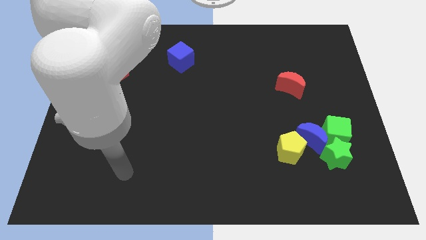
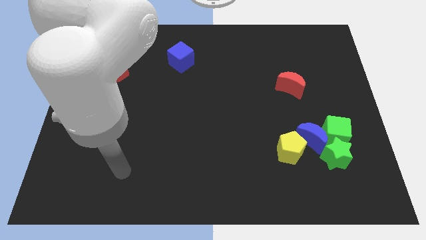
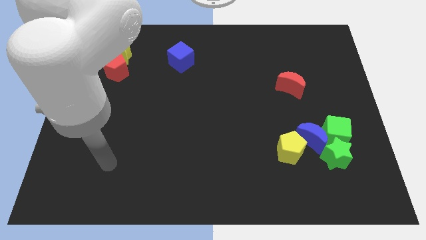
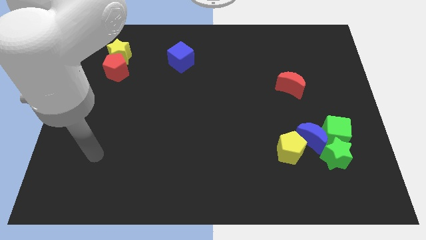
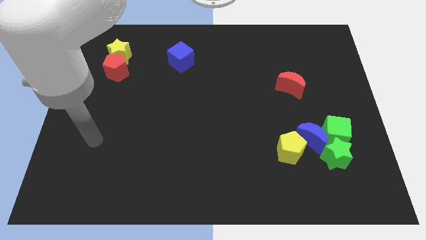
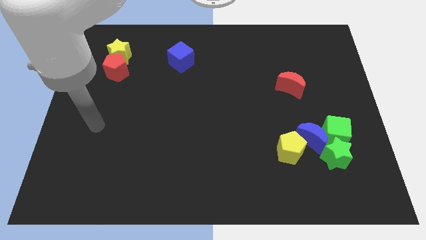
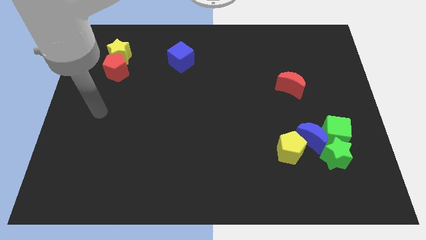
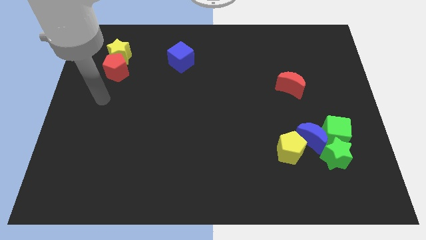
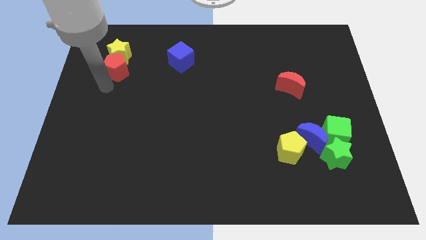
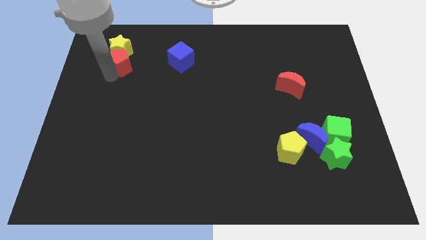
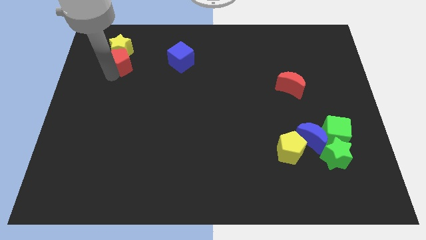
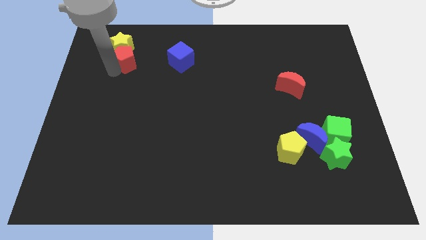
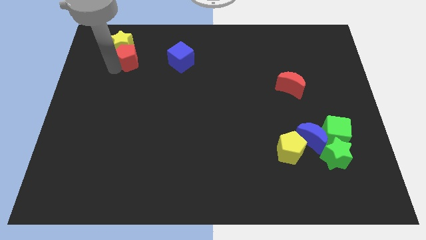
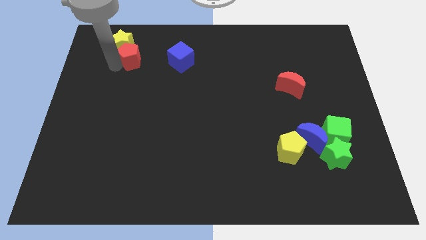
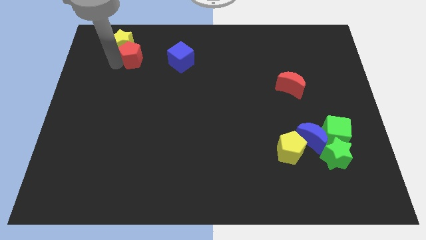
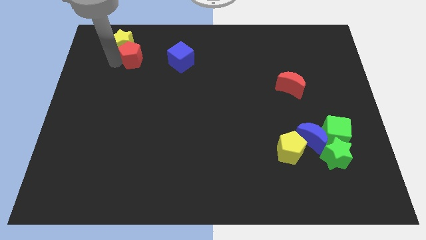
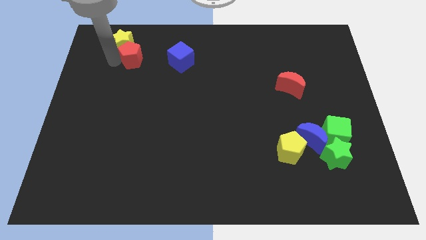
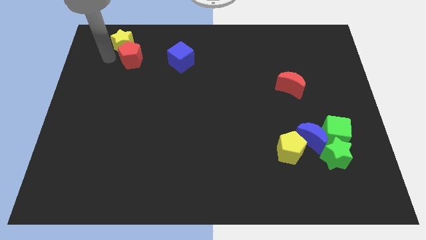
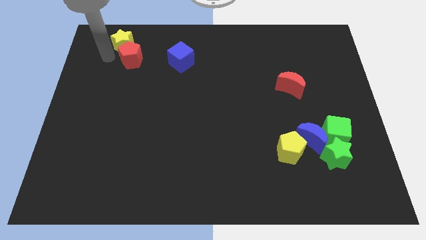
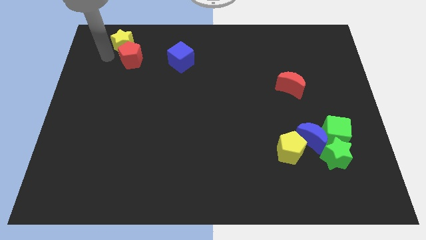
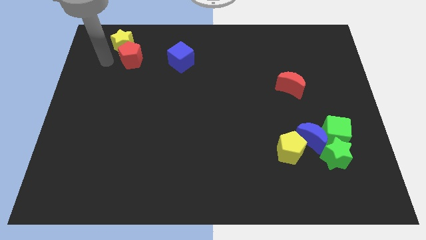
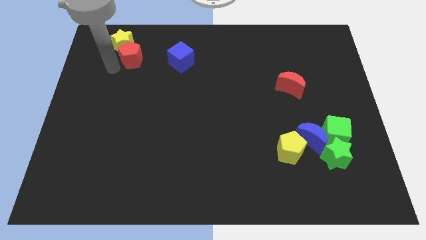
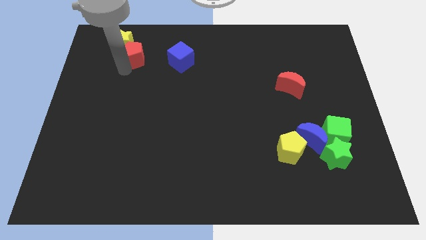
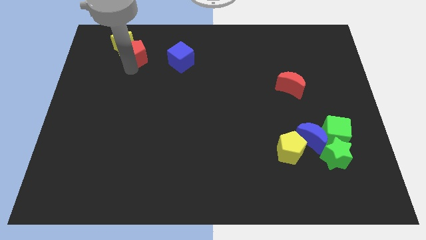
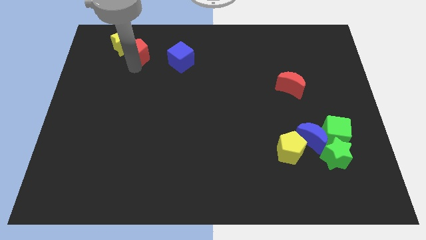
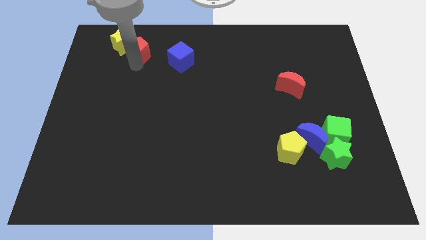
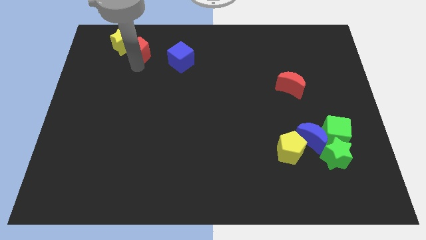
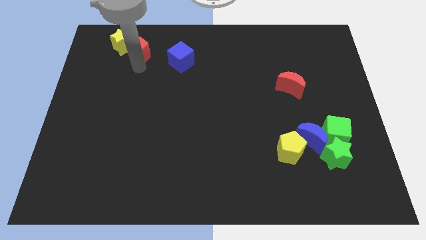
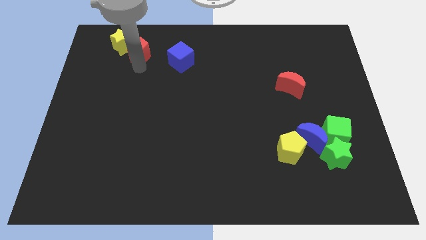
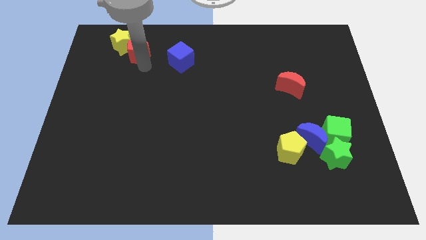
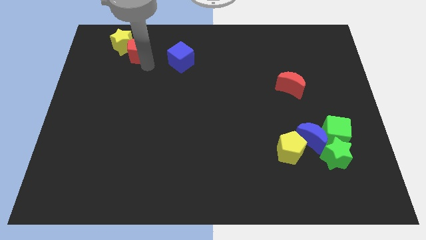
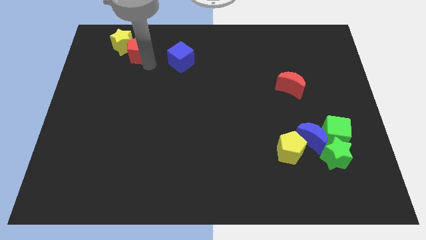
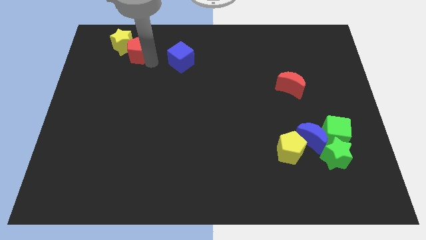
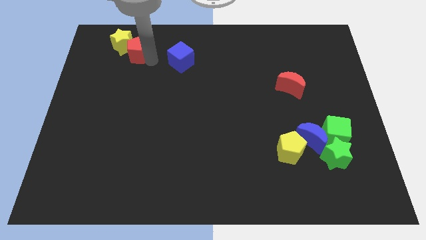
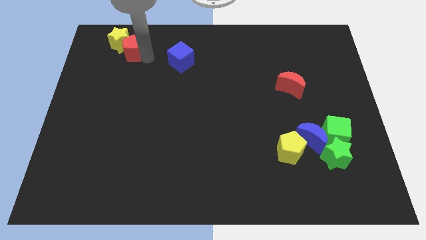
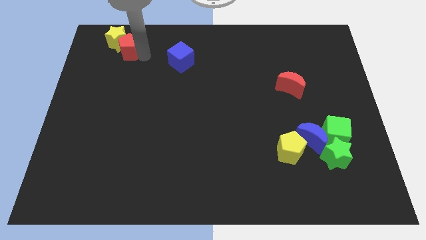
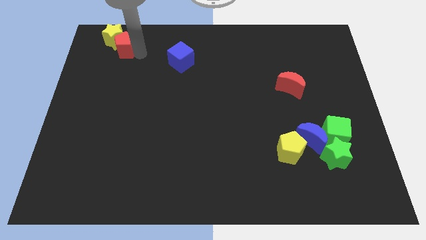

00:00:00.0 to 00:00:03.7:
push the red pentagon into the yellow star

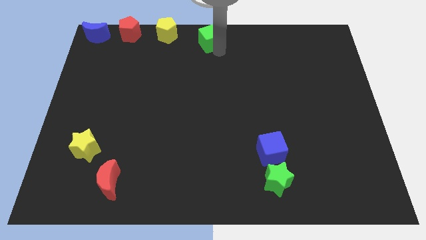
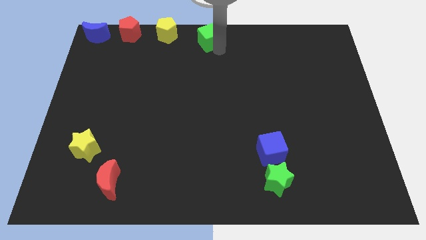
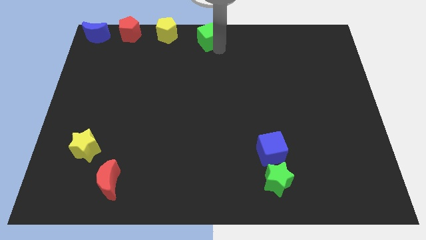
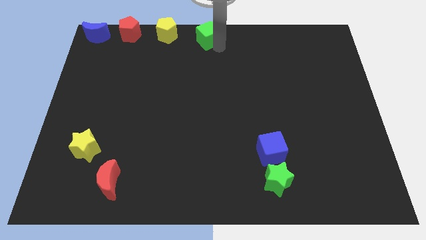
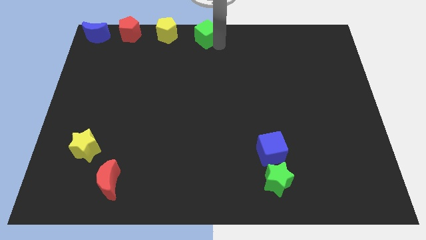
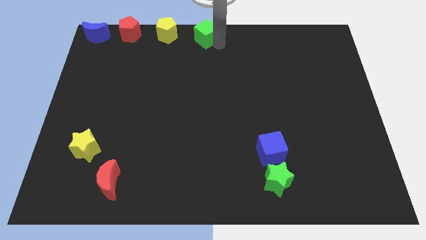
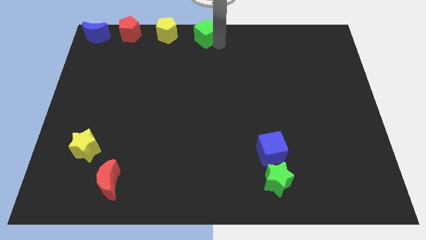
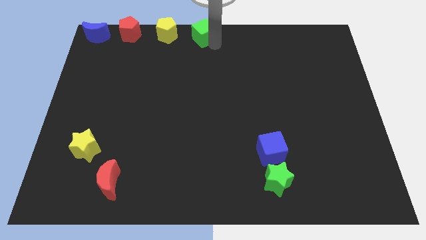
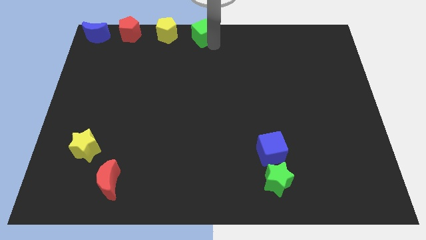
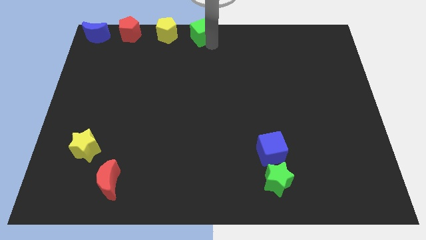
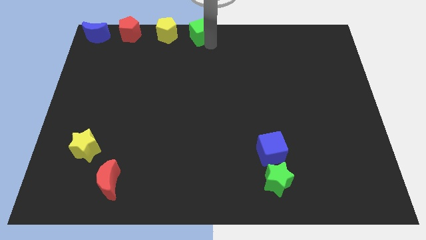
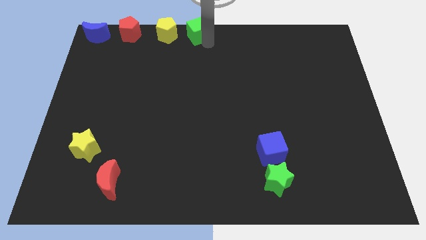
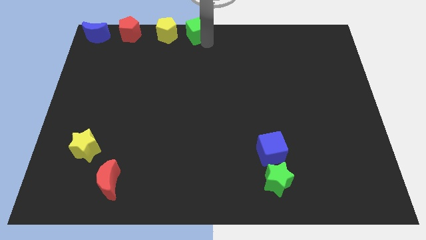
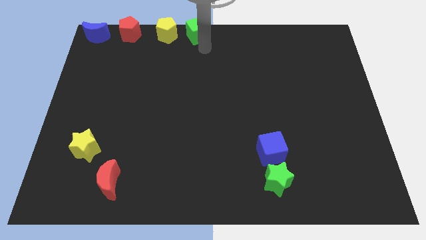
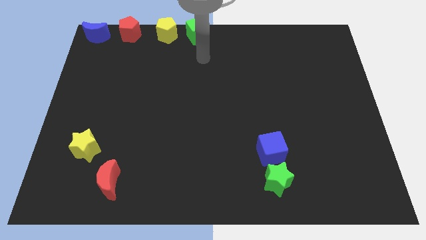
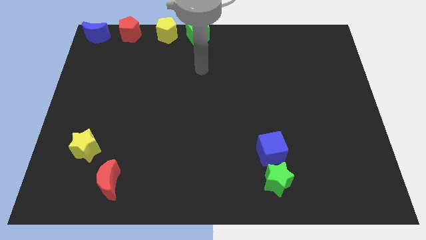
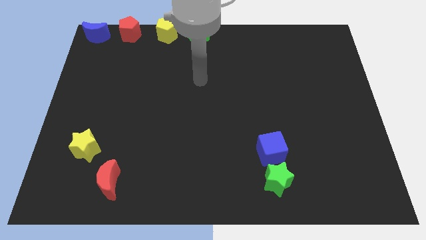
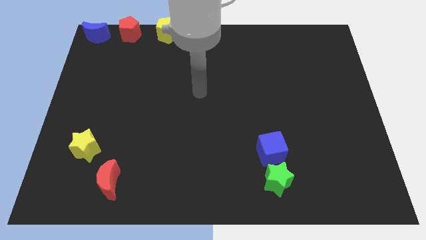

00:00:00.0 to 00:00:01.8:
place the green cube close to the yellow pentagon

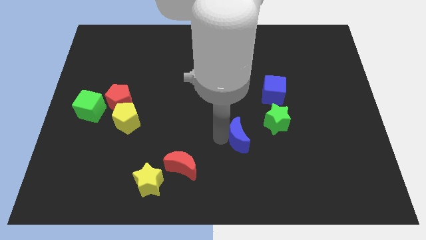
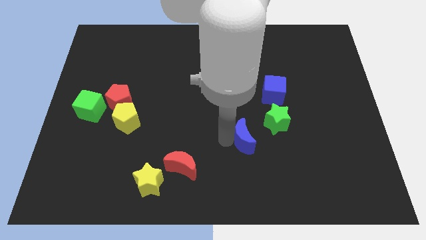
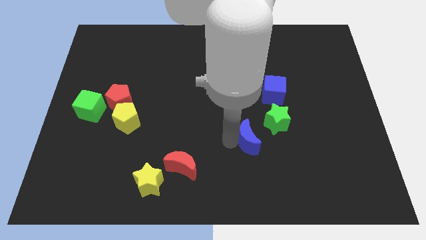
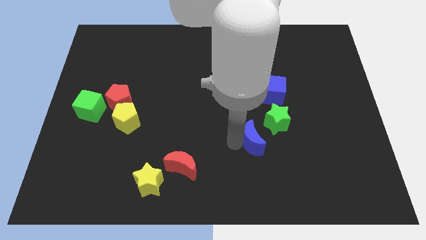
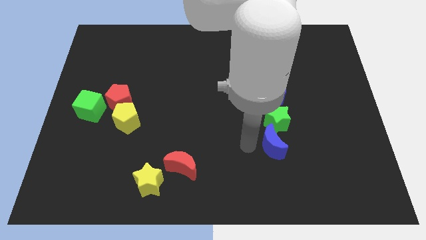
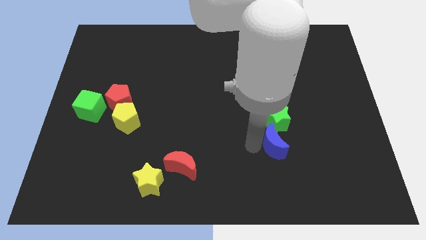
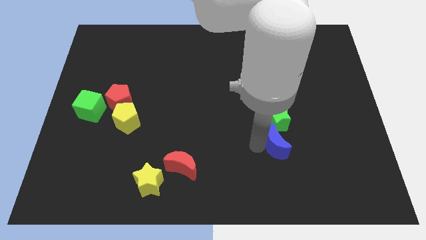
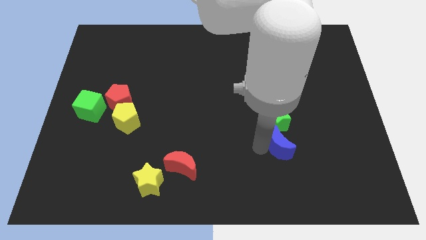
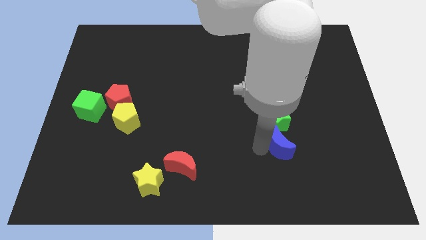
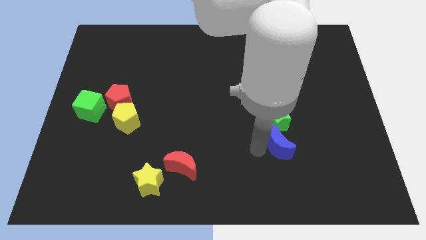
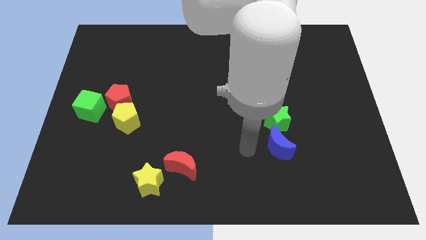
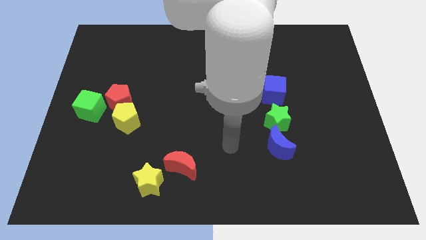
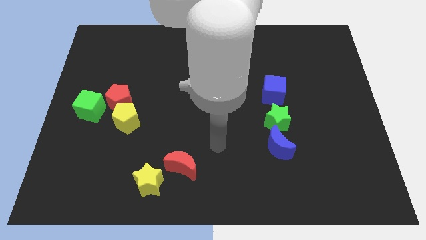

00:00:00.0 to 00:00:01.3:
place the blue crescent below the green star

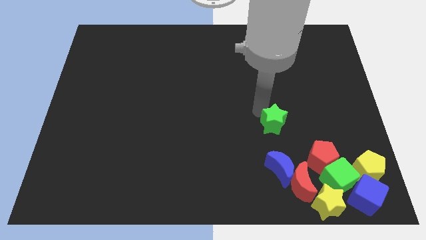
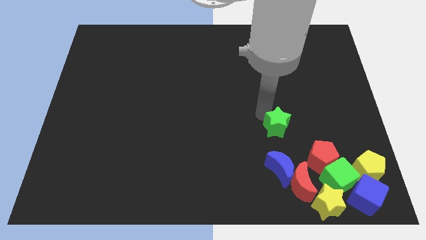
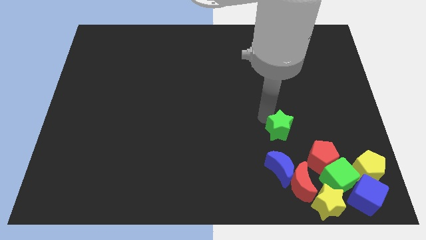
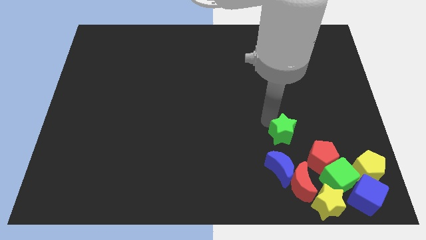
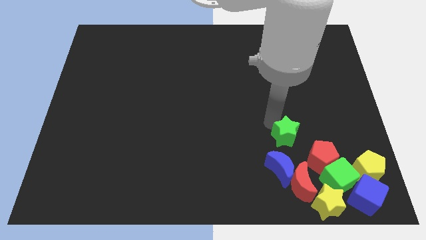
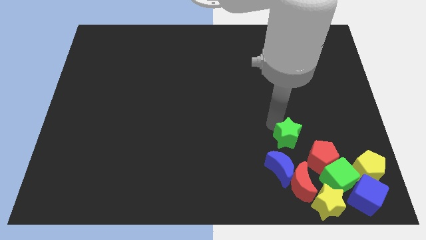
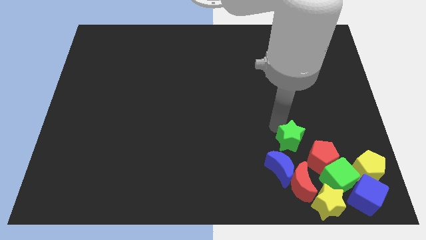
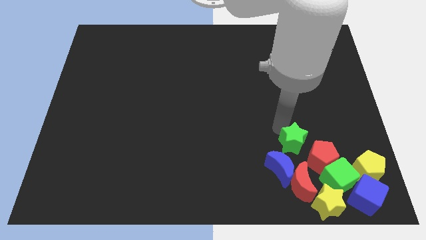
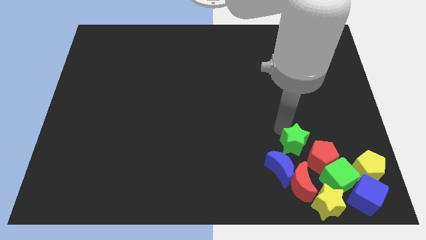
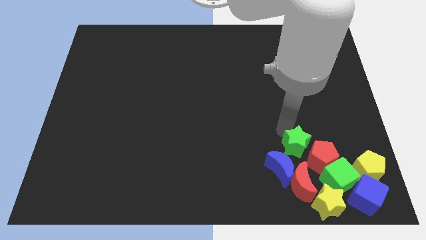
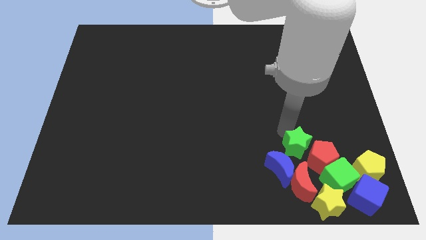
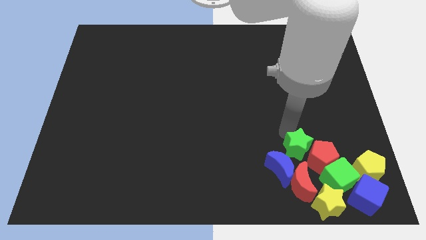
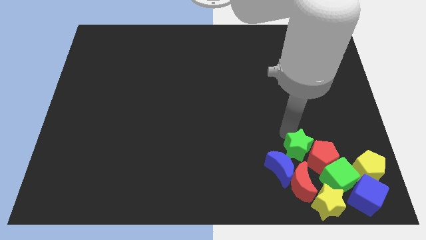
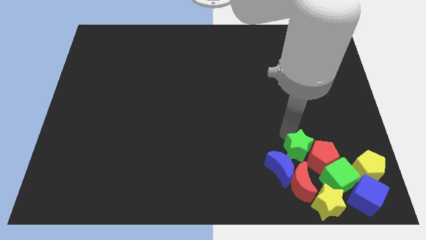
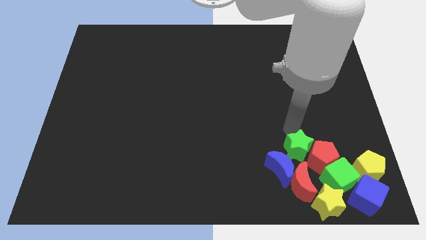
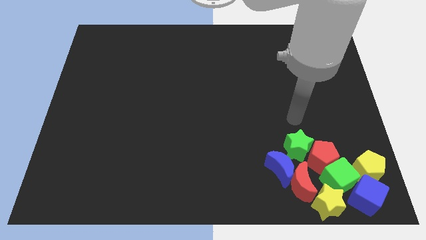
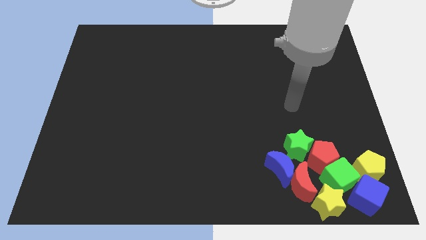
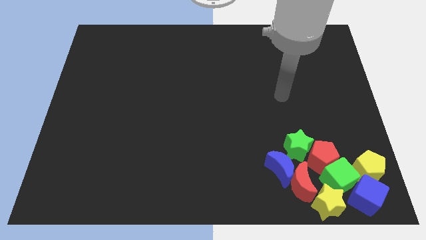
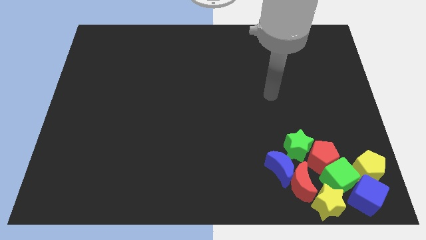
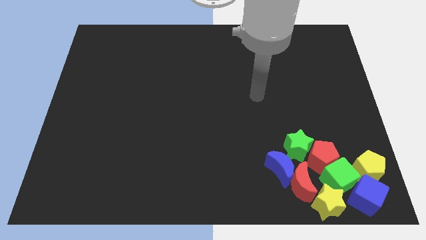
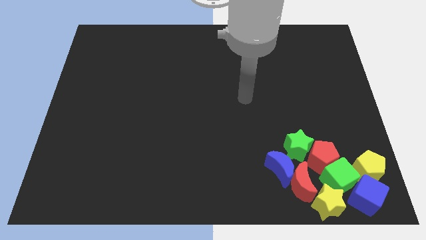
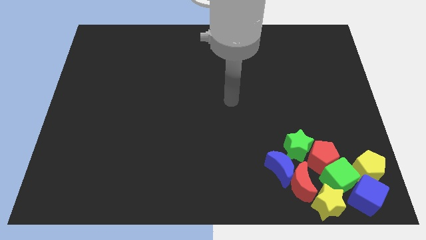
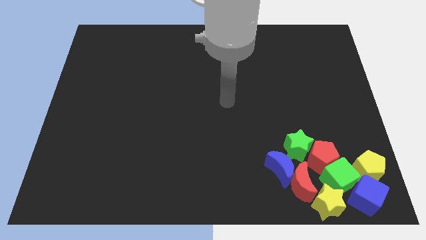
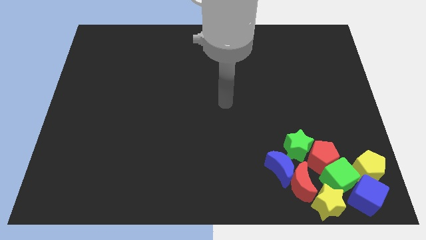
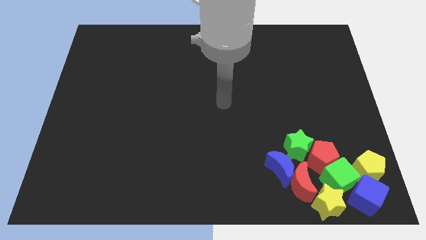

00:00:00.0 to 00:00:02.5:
move the green star into the group of blocks
